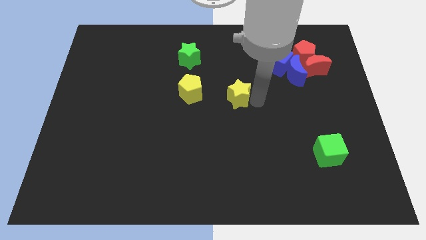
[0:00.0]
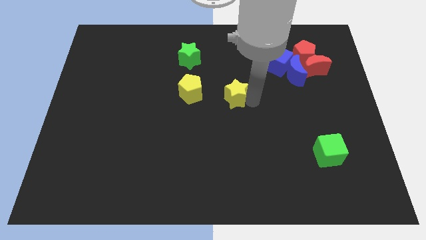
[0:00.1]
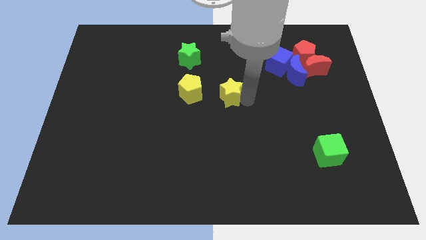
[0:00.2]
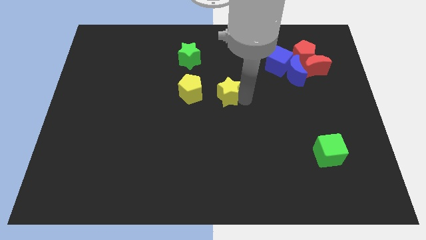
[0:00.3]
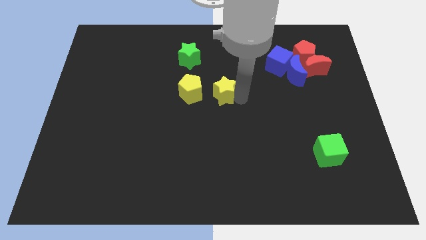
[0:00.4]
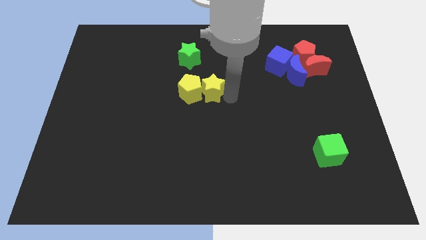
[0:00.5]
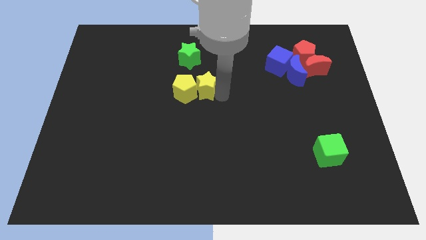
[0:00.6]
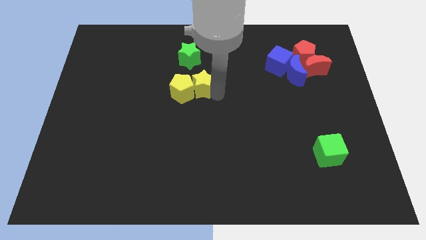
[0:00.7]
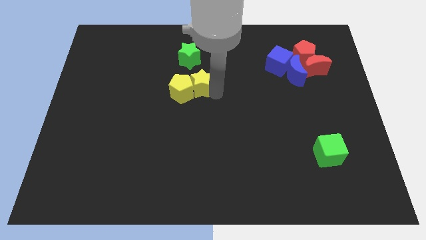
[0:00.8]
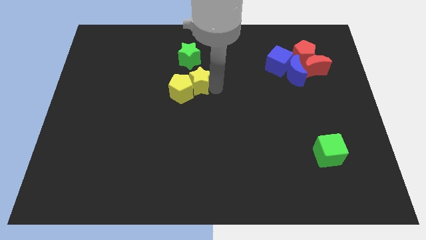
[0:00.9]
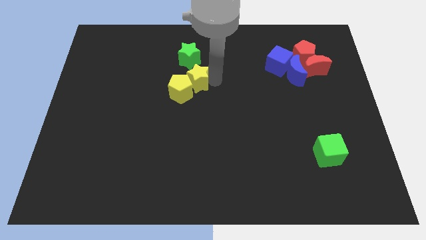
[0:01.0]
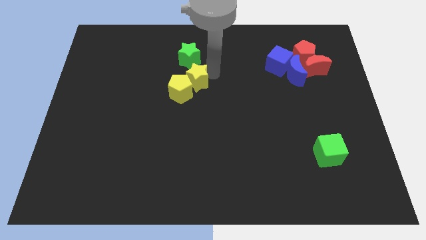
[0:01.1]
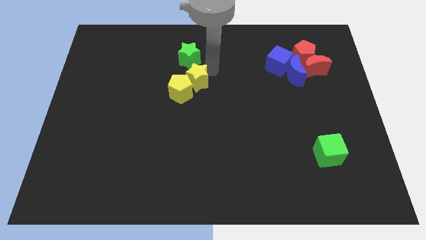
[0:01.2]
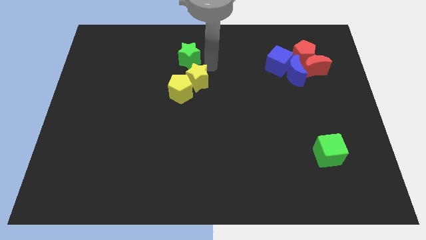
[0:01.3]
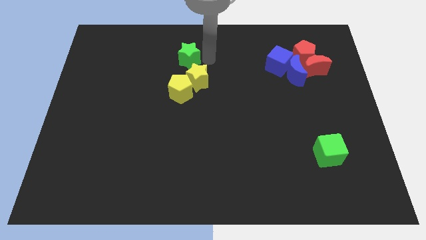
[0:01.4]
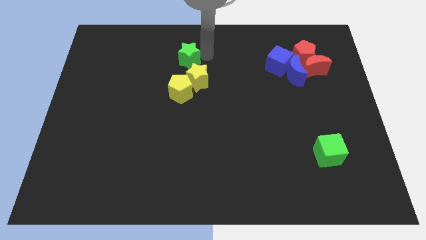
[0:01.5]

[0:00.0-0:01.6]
push the yellow star into the yellow pentagon

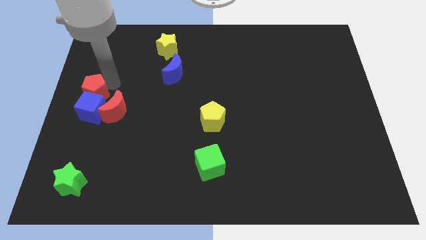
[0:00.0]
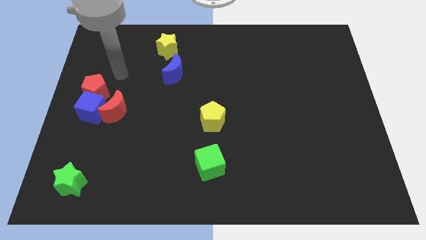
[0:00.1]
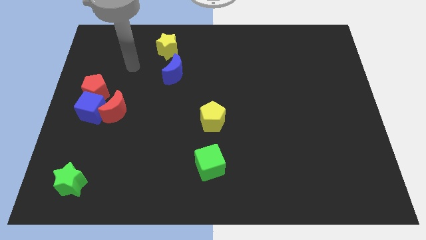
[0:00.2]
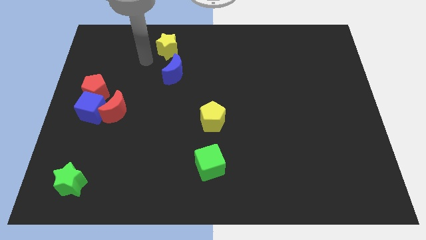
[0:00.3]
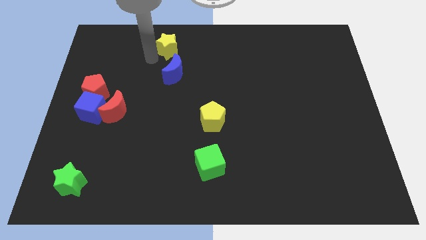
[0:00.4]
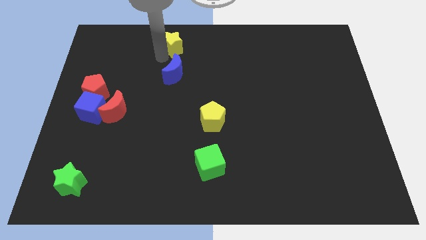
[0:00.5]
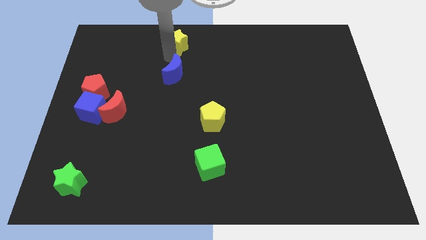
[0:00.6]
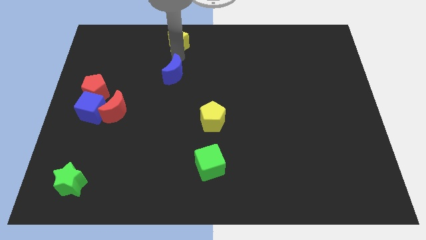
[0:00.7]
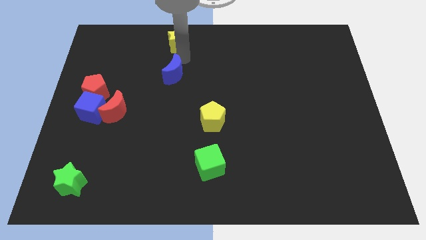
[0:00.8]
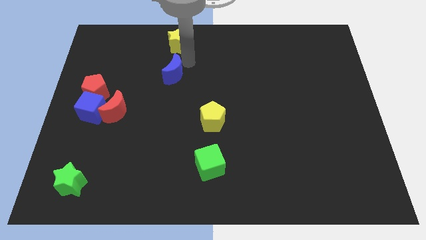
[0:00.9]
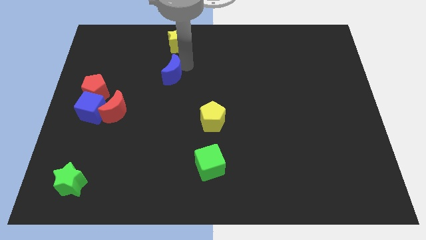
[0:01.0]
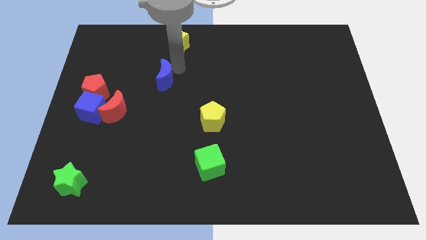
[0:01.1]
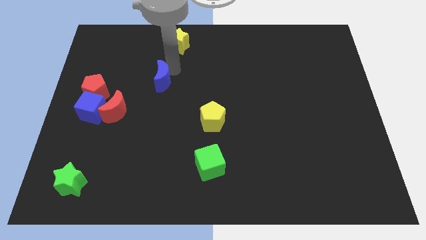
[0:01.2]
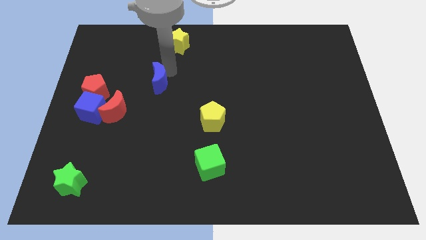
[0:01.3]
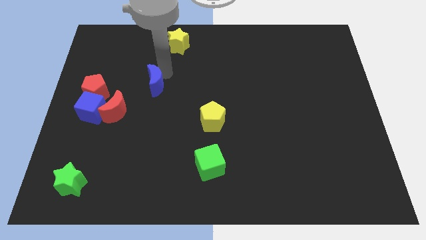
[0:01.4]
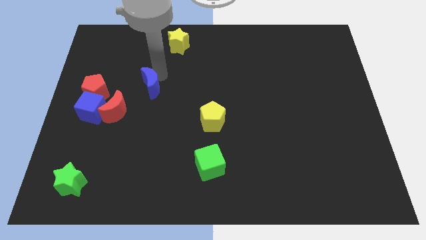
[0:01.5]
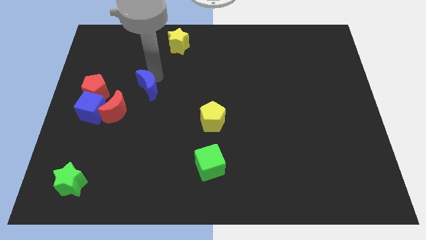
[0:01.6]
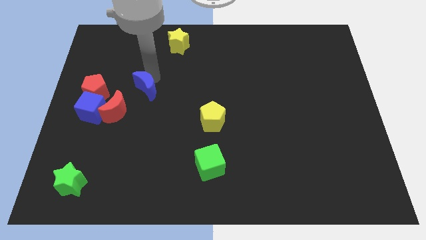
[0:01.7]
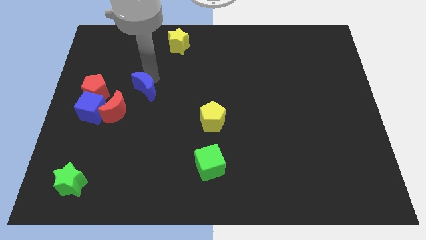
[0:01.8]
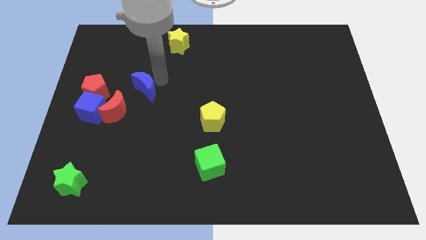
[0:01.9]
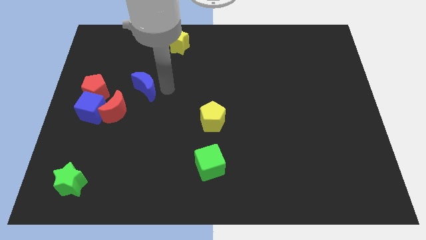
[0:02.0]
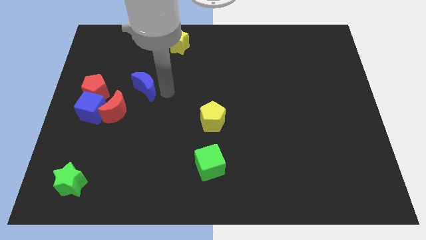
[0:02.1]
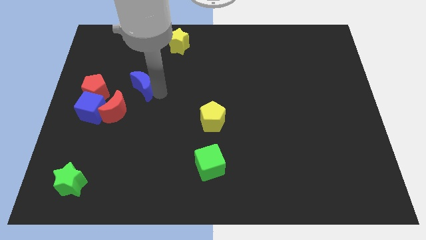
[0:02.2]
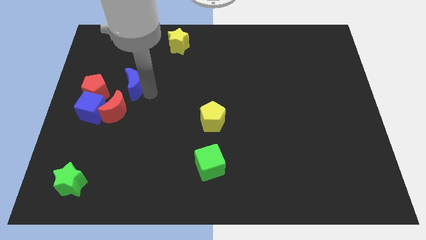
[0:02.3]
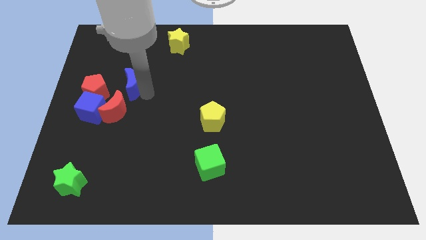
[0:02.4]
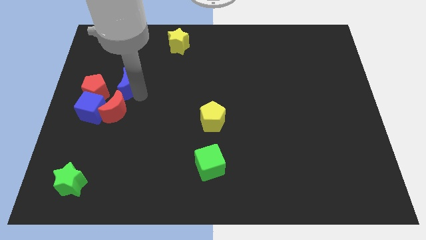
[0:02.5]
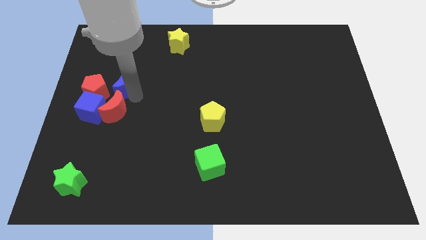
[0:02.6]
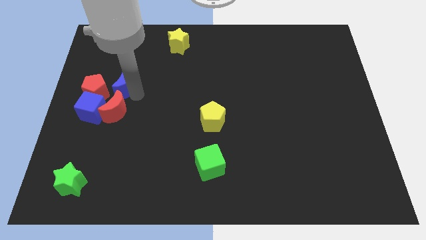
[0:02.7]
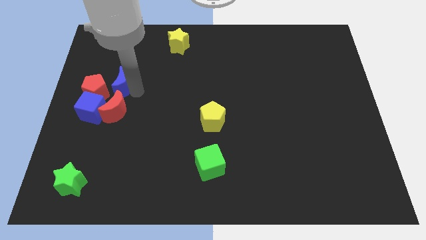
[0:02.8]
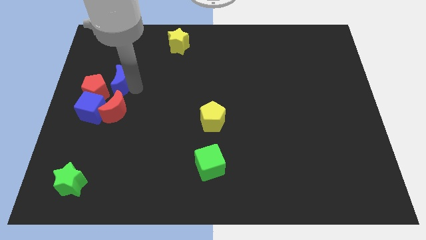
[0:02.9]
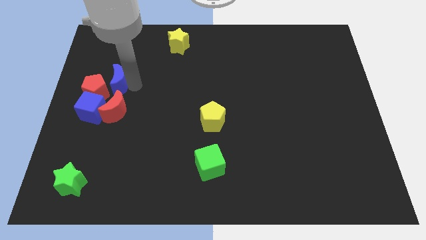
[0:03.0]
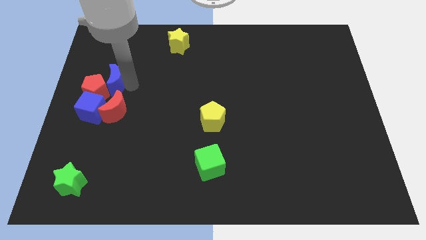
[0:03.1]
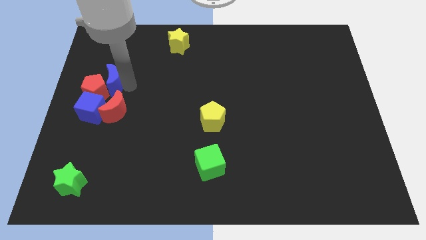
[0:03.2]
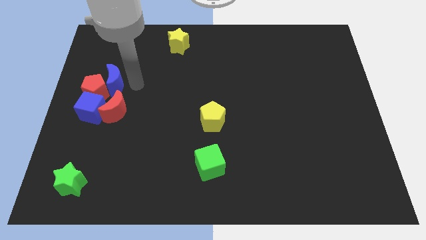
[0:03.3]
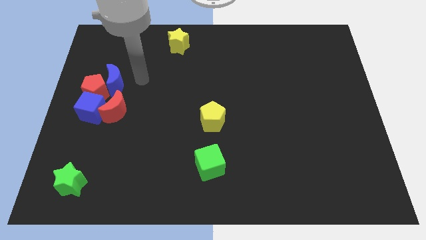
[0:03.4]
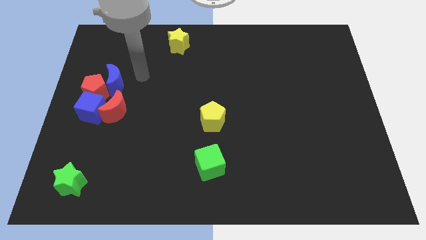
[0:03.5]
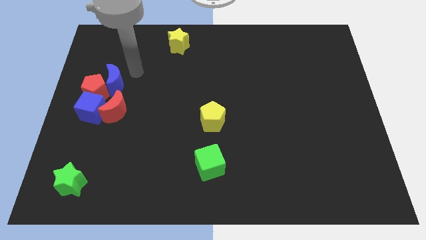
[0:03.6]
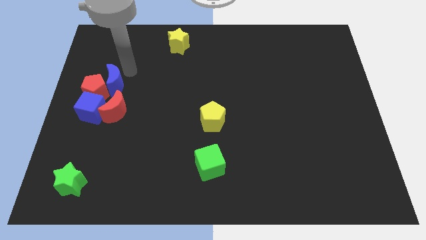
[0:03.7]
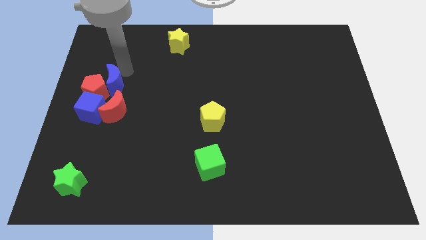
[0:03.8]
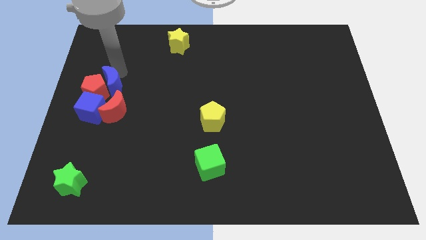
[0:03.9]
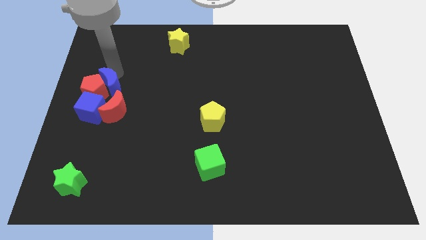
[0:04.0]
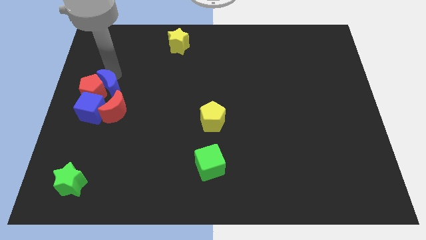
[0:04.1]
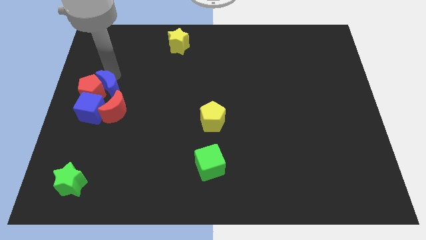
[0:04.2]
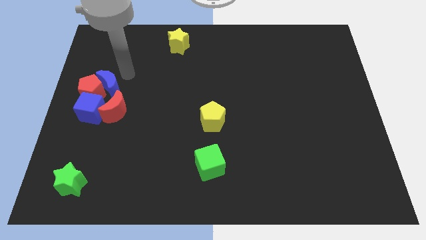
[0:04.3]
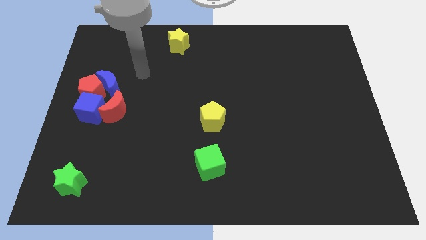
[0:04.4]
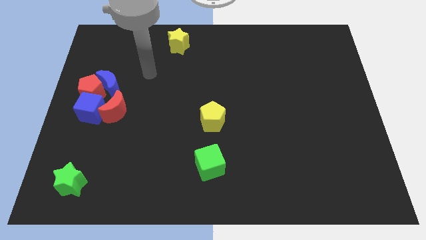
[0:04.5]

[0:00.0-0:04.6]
push the blue crescent to the right of red pentagon

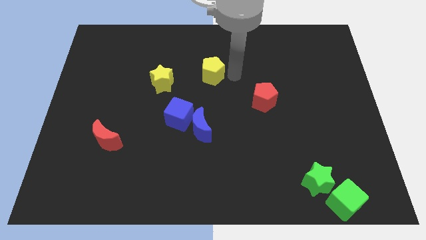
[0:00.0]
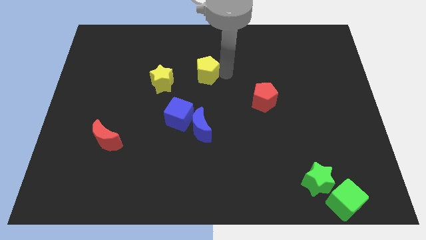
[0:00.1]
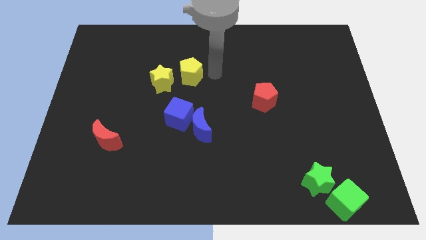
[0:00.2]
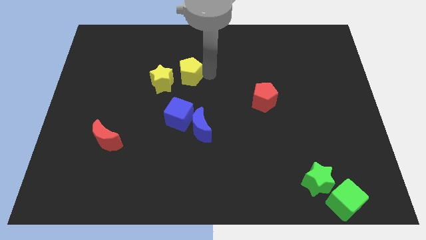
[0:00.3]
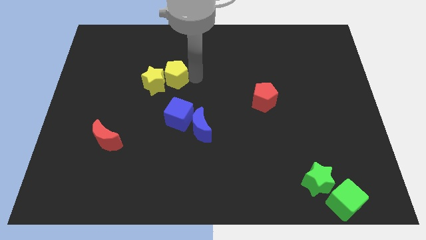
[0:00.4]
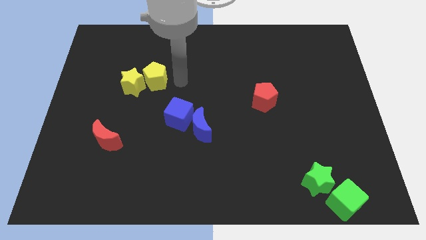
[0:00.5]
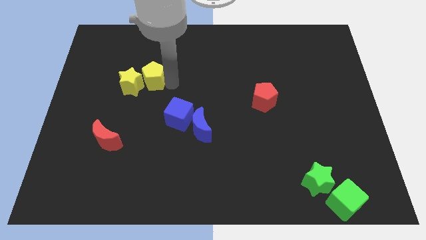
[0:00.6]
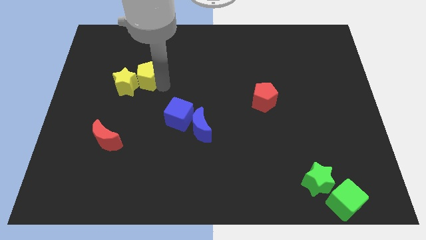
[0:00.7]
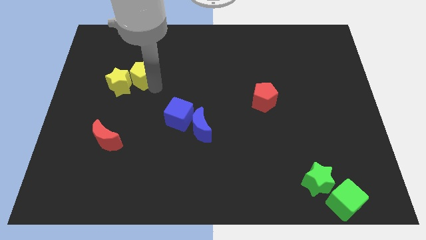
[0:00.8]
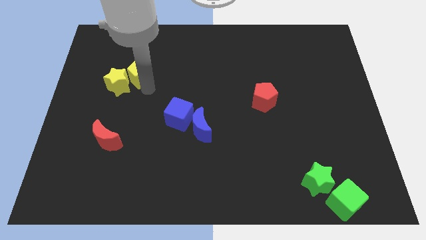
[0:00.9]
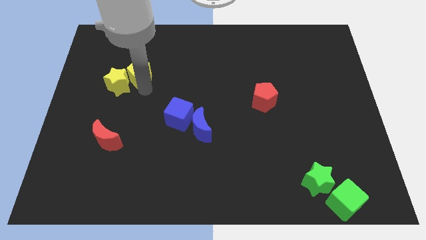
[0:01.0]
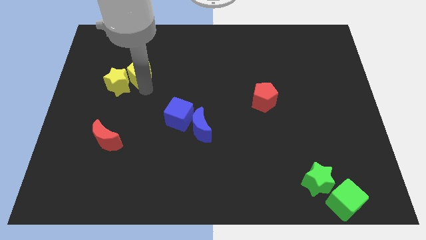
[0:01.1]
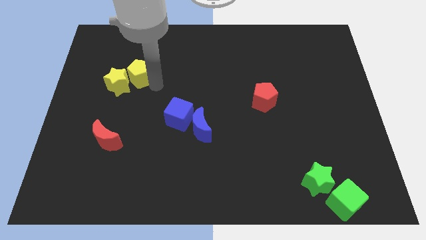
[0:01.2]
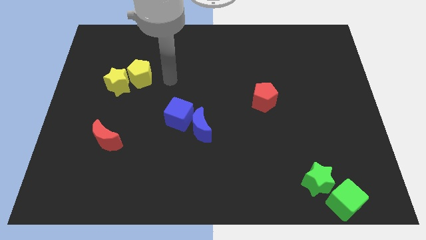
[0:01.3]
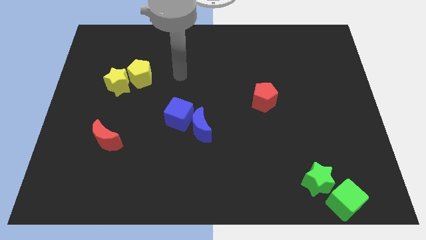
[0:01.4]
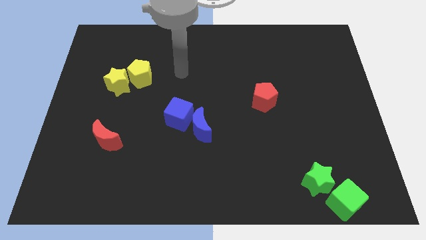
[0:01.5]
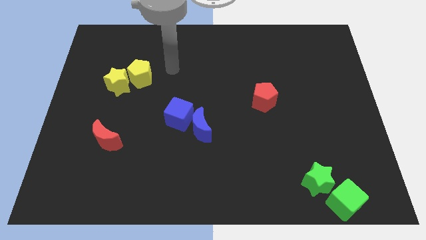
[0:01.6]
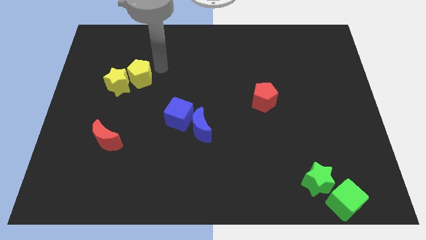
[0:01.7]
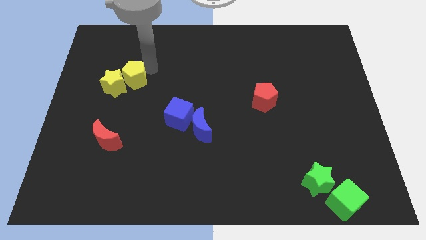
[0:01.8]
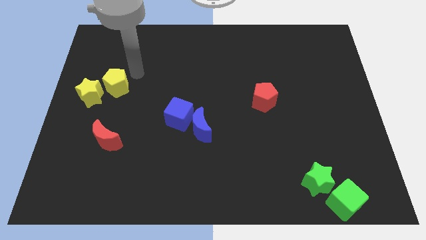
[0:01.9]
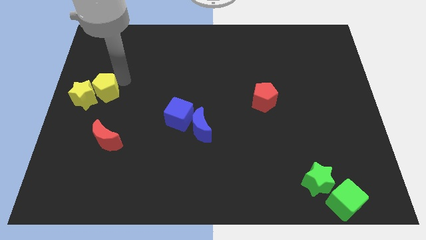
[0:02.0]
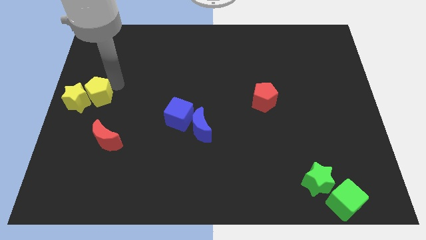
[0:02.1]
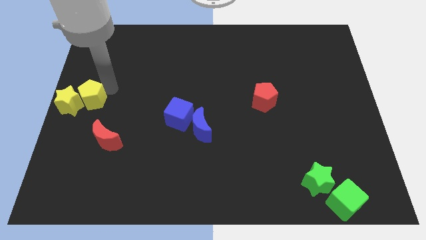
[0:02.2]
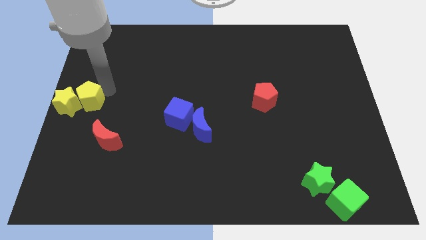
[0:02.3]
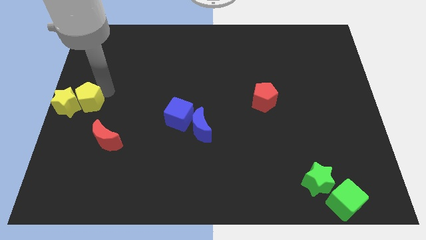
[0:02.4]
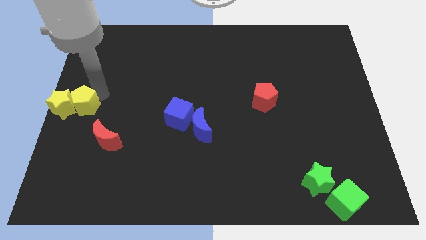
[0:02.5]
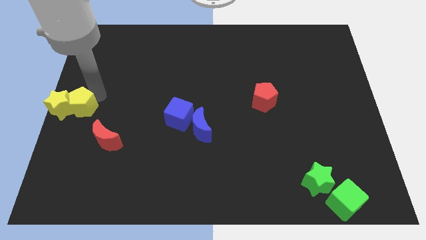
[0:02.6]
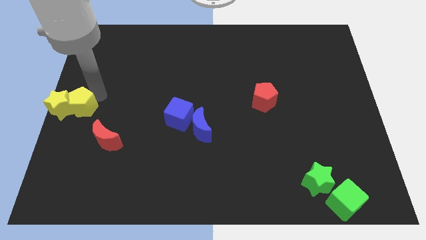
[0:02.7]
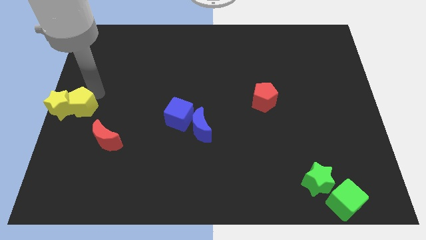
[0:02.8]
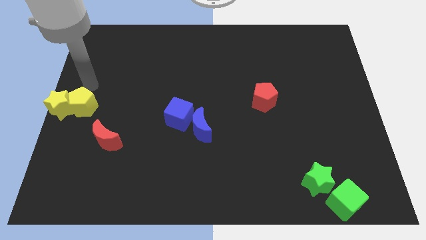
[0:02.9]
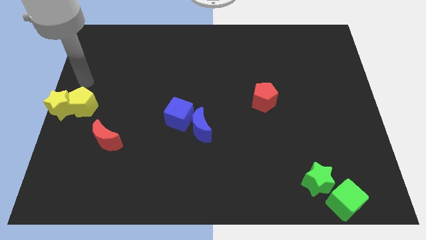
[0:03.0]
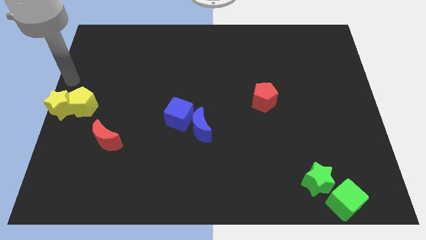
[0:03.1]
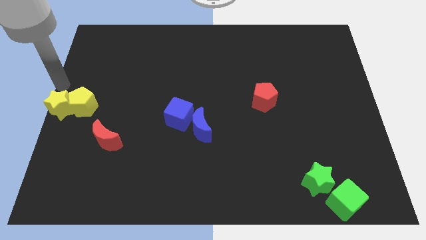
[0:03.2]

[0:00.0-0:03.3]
push the yellow blocks at the center left of the table
